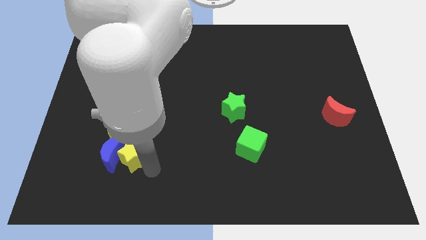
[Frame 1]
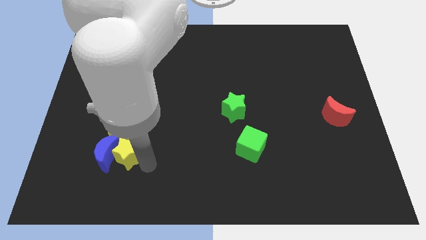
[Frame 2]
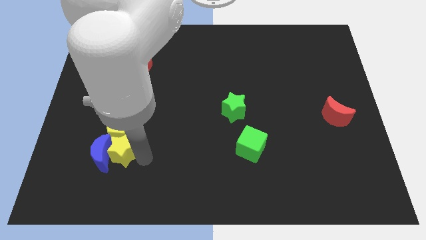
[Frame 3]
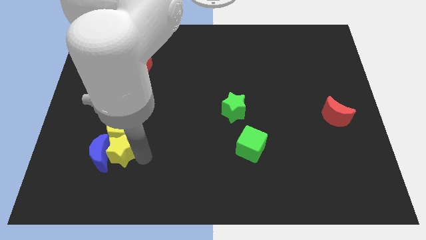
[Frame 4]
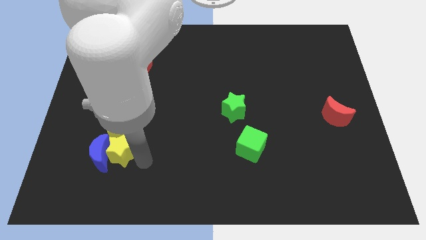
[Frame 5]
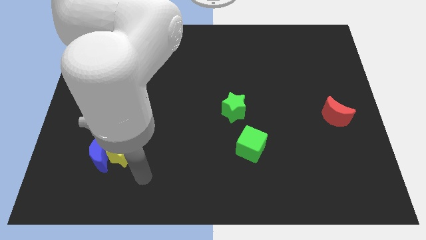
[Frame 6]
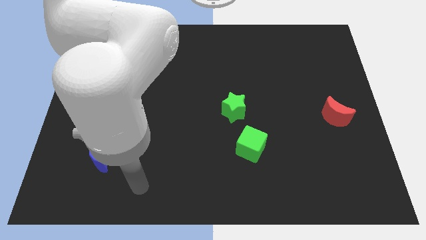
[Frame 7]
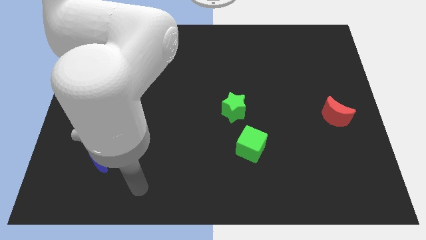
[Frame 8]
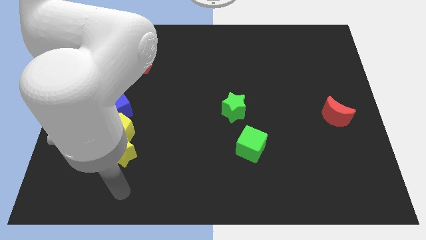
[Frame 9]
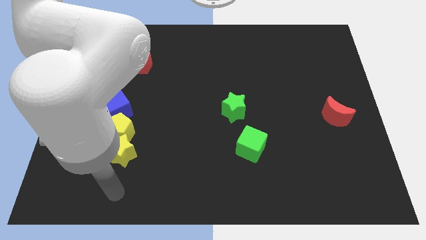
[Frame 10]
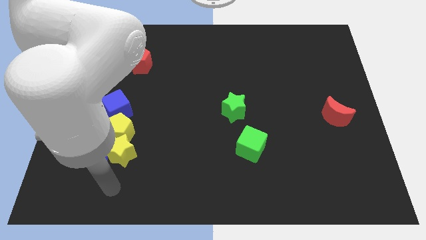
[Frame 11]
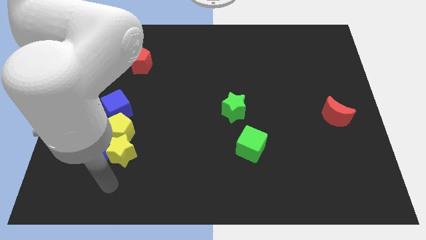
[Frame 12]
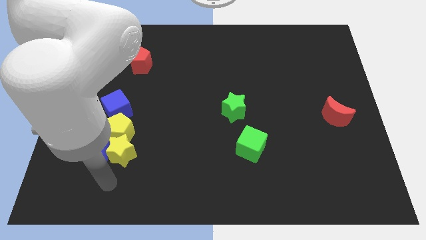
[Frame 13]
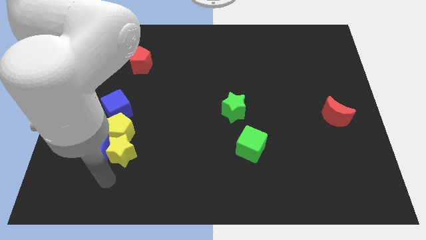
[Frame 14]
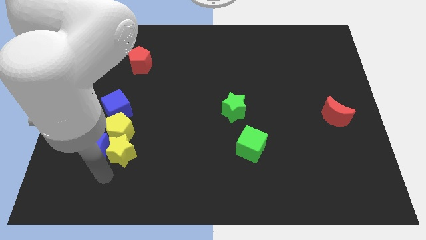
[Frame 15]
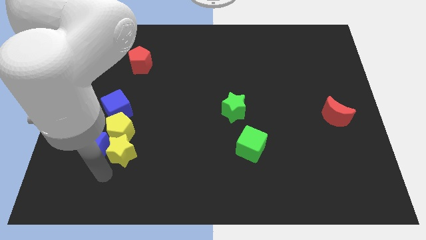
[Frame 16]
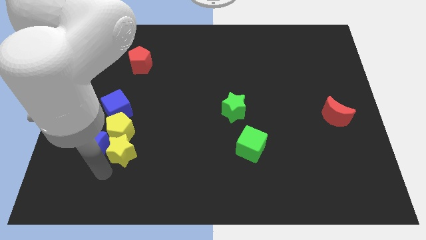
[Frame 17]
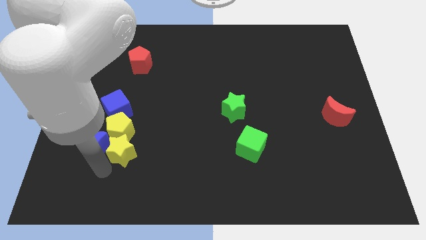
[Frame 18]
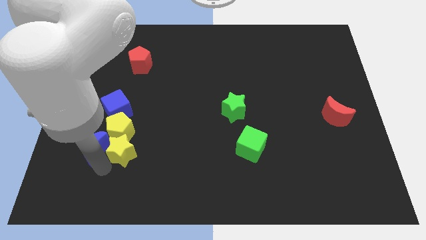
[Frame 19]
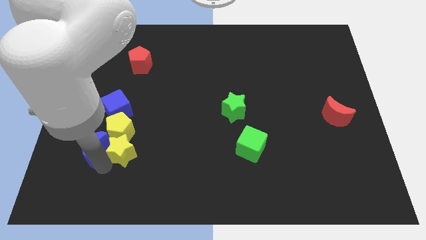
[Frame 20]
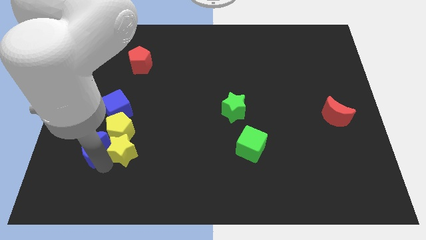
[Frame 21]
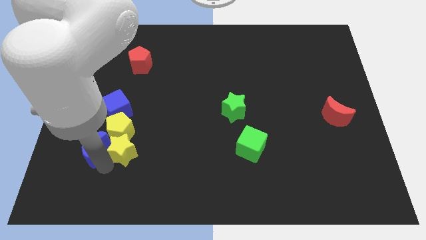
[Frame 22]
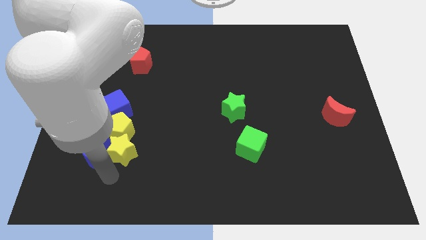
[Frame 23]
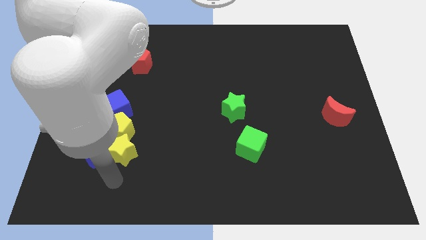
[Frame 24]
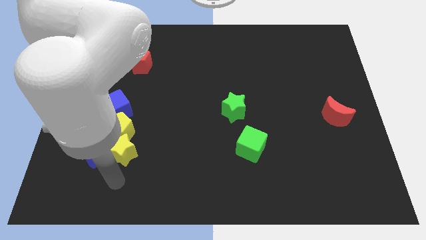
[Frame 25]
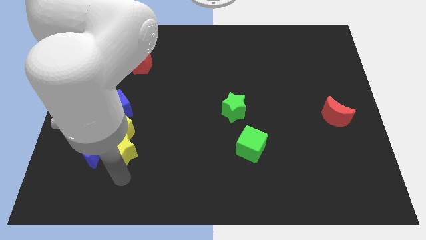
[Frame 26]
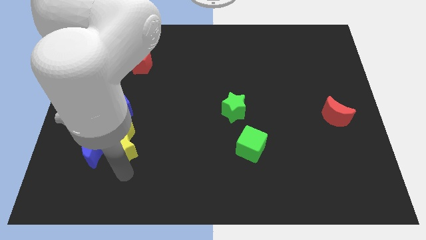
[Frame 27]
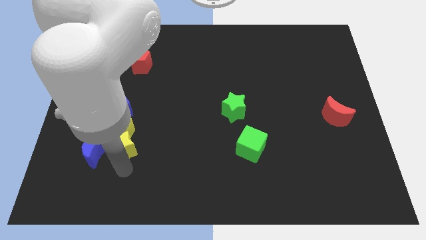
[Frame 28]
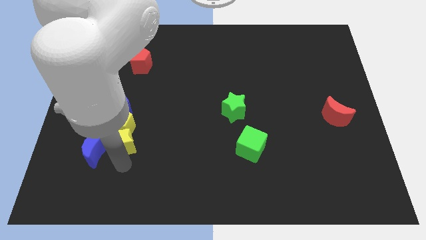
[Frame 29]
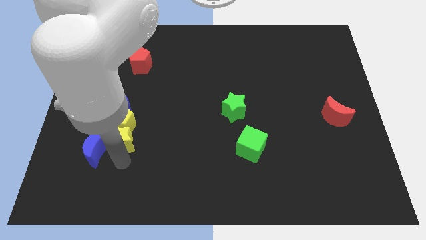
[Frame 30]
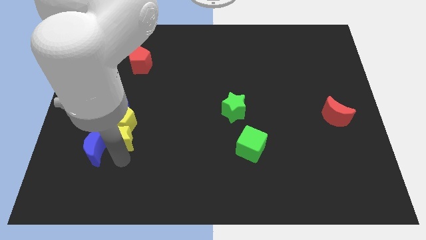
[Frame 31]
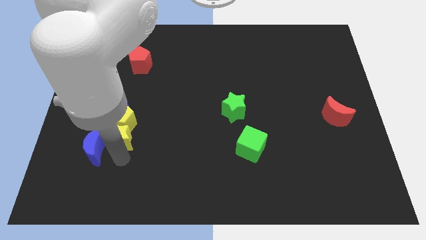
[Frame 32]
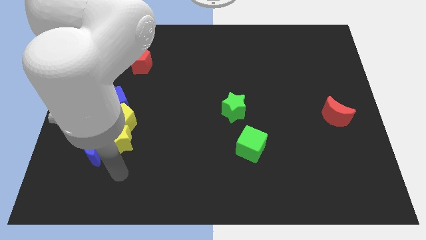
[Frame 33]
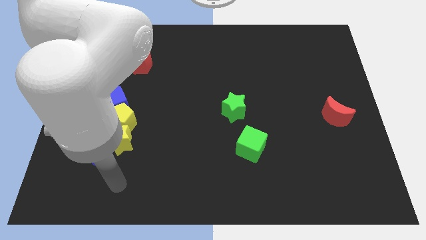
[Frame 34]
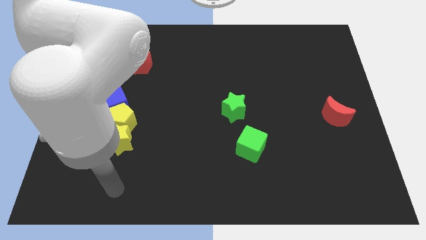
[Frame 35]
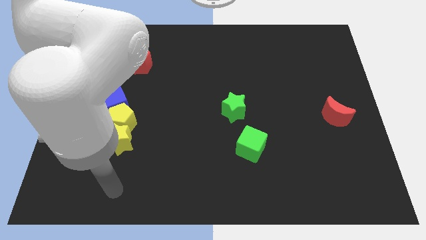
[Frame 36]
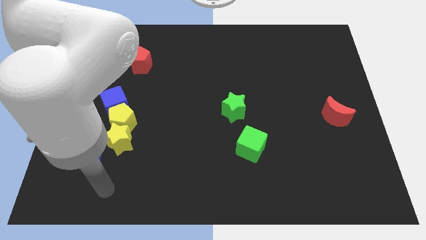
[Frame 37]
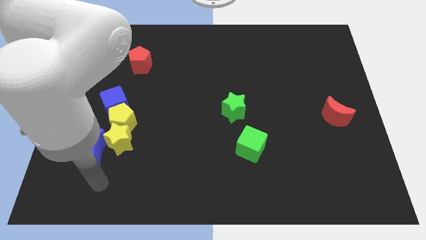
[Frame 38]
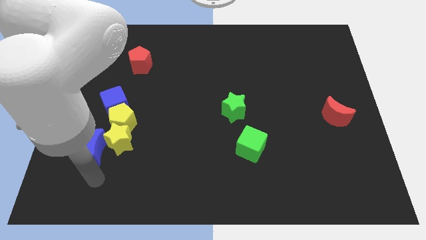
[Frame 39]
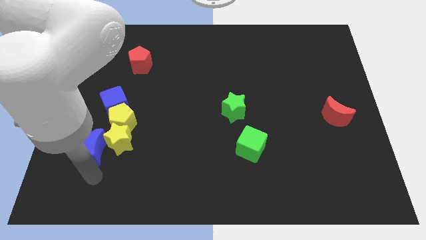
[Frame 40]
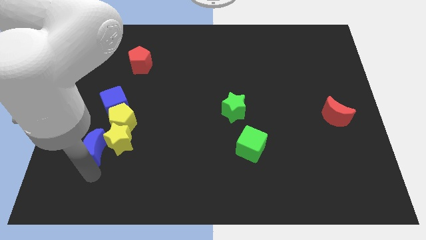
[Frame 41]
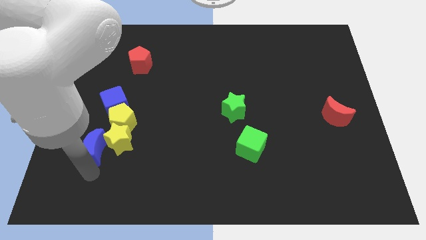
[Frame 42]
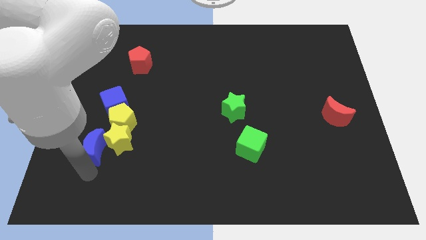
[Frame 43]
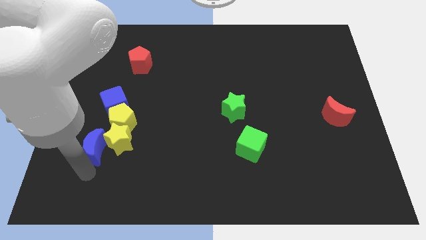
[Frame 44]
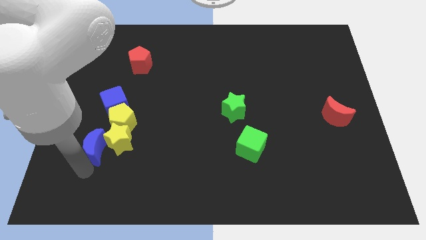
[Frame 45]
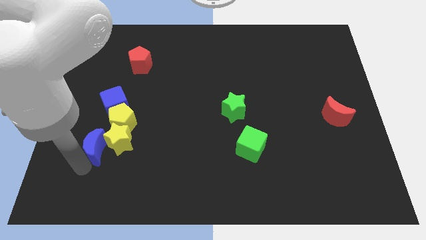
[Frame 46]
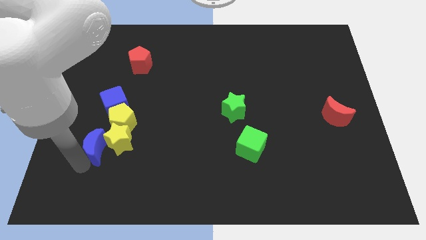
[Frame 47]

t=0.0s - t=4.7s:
push the yellow star into the yellow pentagon

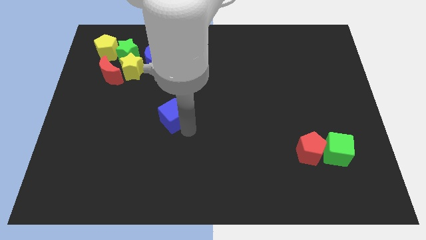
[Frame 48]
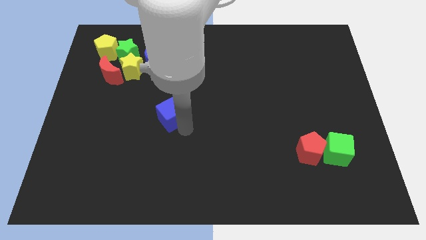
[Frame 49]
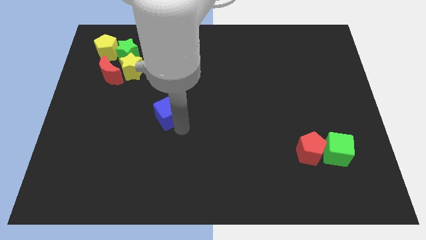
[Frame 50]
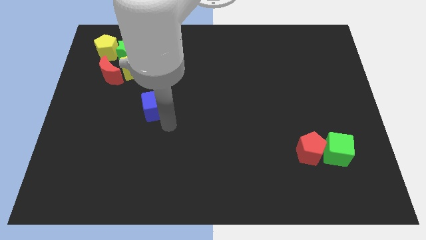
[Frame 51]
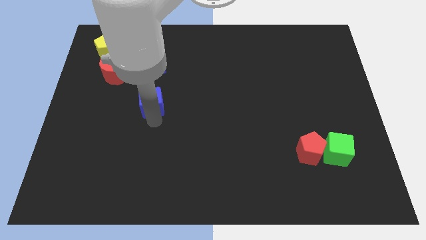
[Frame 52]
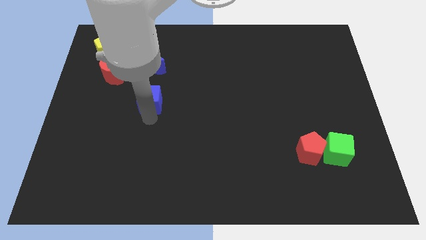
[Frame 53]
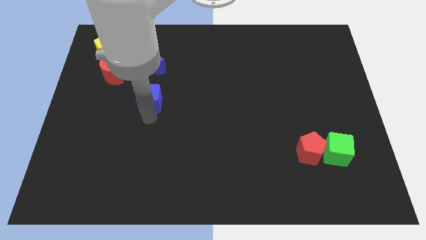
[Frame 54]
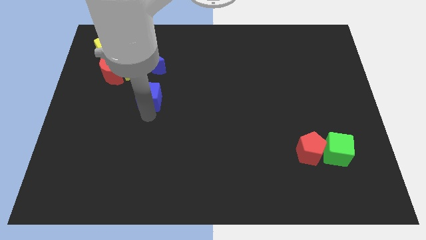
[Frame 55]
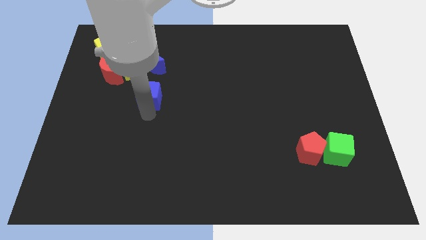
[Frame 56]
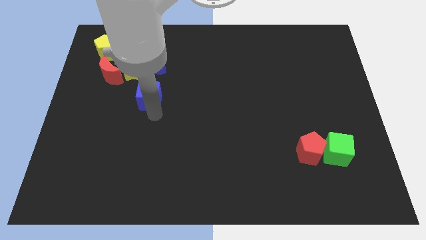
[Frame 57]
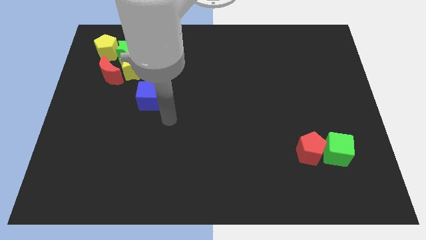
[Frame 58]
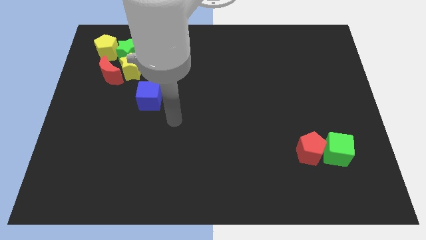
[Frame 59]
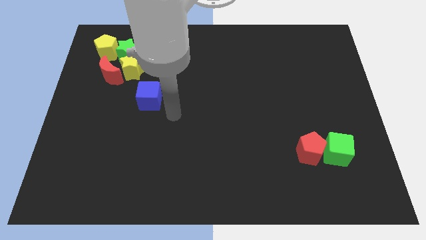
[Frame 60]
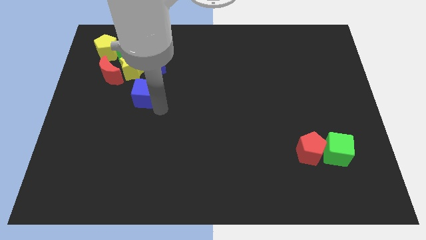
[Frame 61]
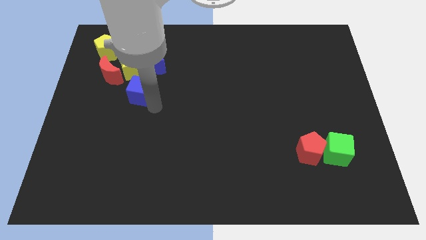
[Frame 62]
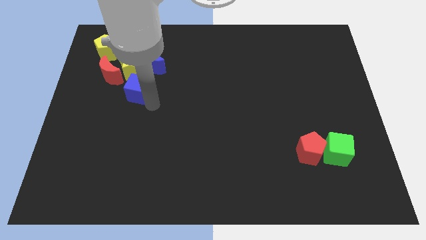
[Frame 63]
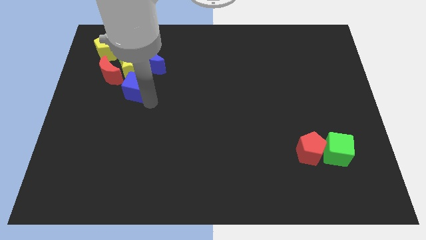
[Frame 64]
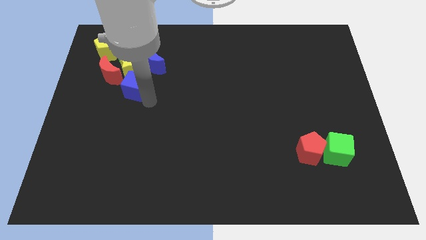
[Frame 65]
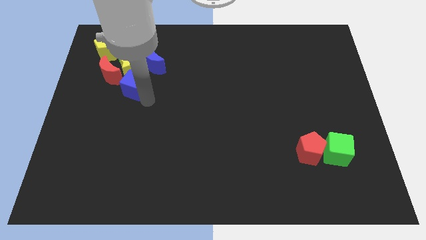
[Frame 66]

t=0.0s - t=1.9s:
place the blue cube below the yellow star

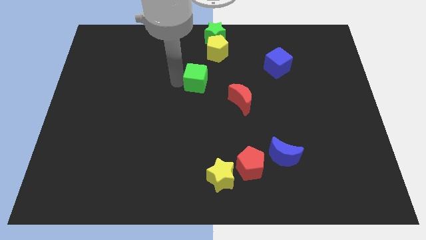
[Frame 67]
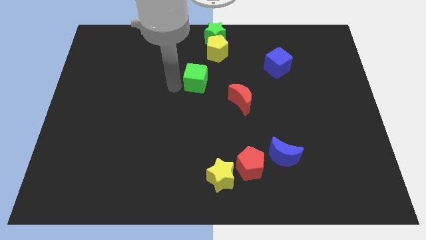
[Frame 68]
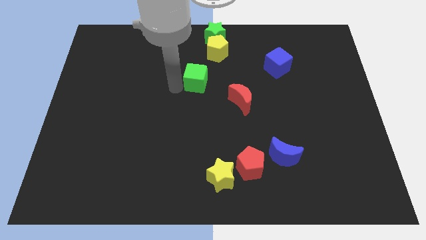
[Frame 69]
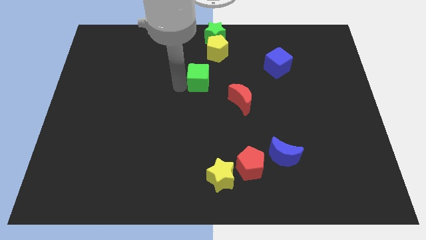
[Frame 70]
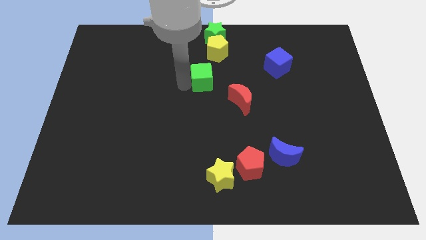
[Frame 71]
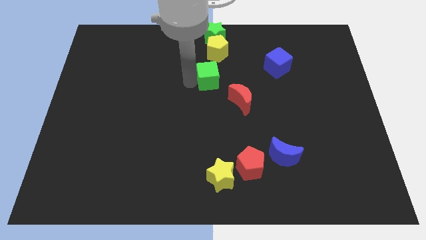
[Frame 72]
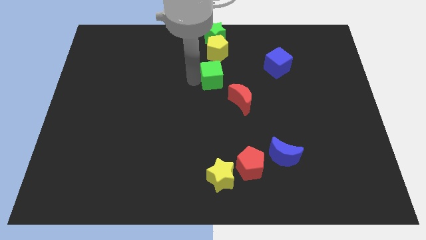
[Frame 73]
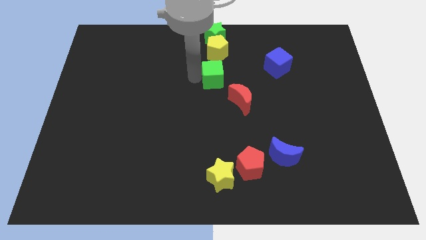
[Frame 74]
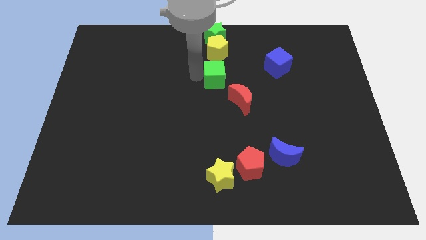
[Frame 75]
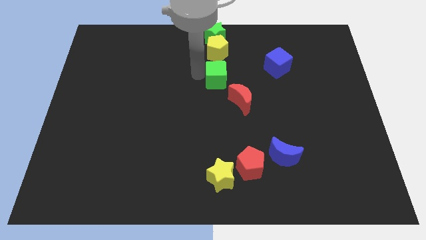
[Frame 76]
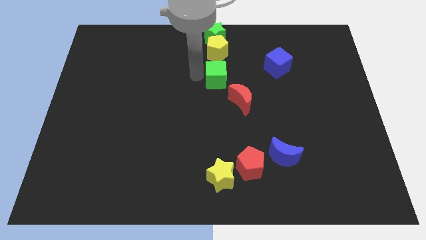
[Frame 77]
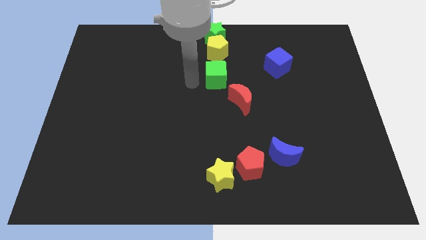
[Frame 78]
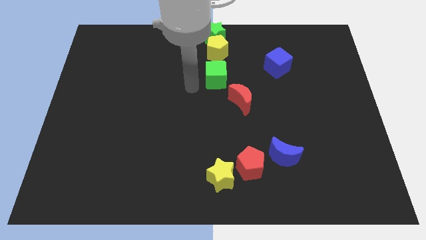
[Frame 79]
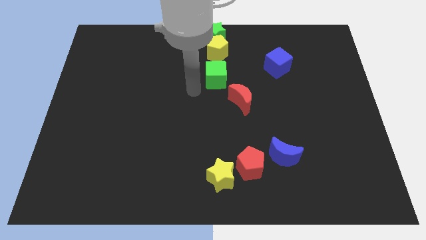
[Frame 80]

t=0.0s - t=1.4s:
place the green cube below the yellow pentagon

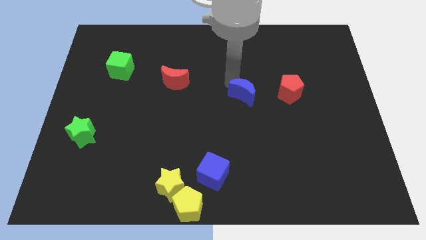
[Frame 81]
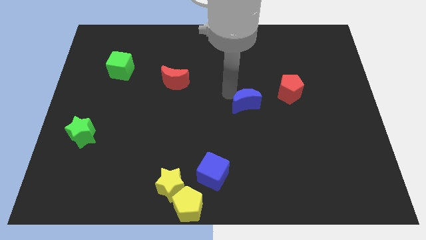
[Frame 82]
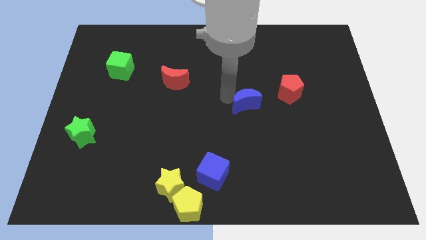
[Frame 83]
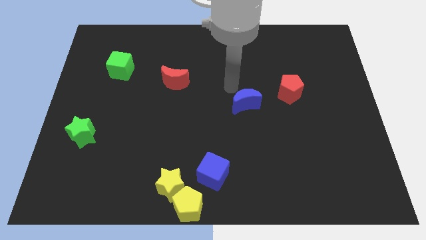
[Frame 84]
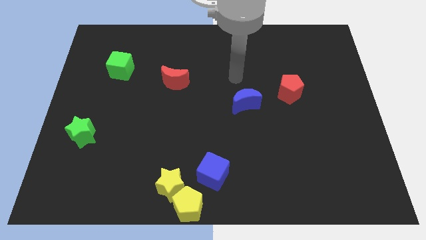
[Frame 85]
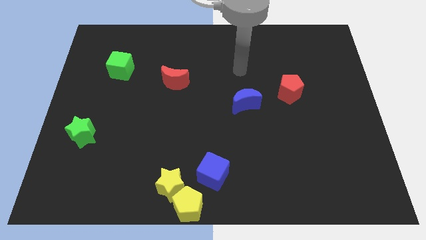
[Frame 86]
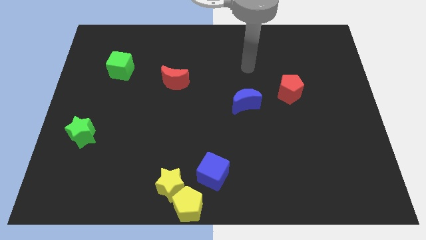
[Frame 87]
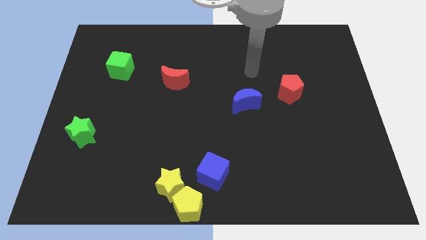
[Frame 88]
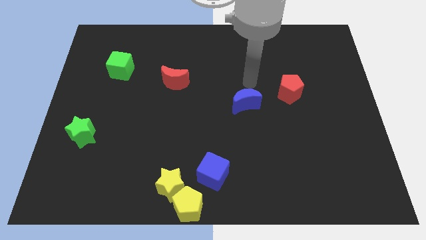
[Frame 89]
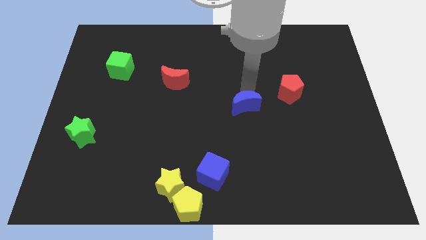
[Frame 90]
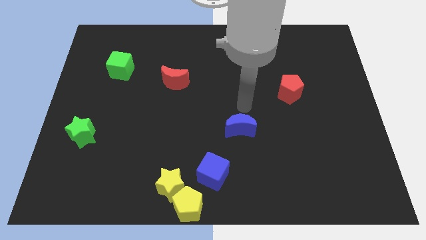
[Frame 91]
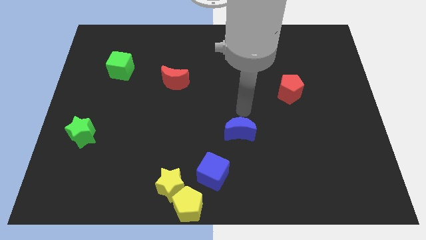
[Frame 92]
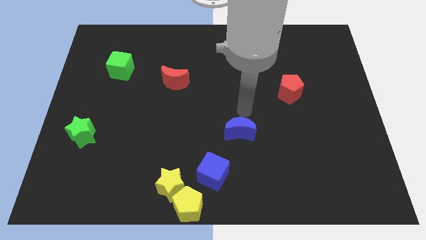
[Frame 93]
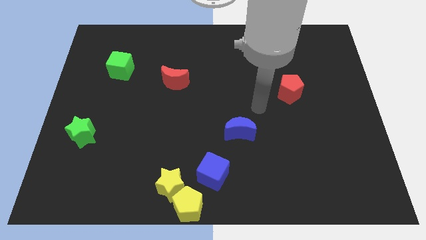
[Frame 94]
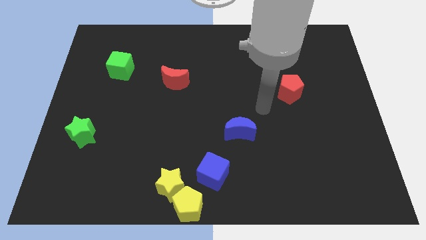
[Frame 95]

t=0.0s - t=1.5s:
place the blue moon diagonally bottom left to the red pentagon
